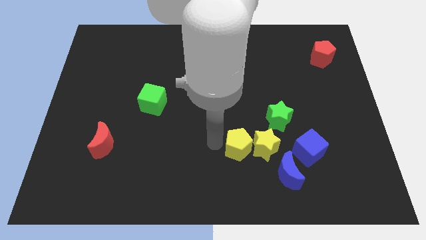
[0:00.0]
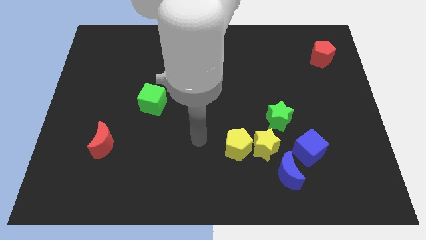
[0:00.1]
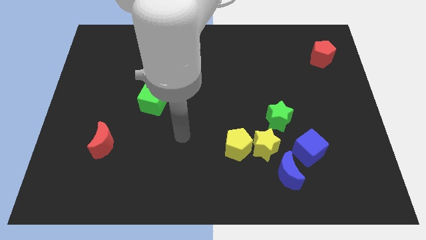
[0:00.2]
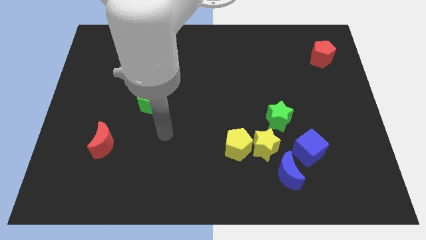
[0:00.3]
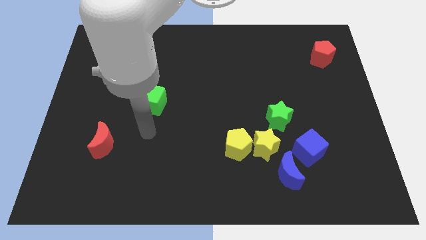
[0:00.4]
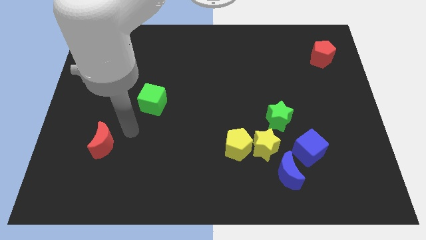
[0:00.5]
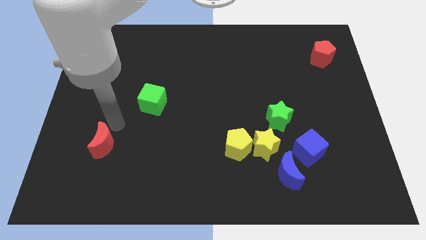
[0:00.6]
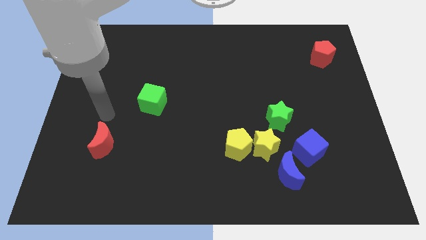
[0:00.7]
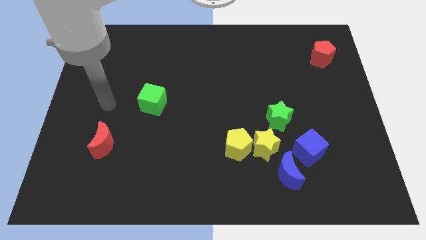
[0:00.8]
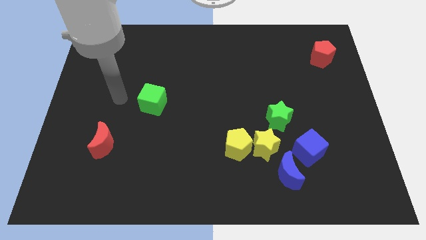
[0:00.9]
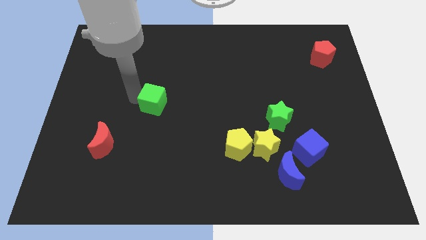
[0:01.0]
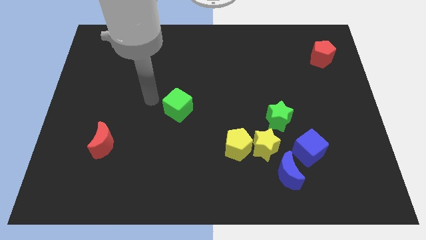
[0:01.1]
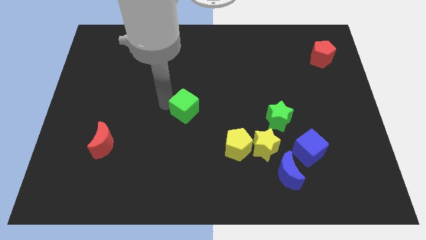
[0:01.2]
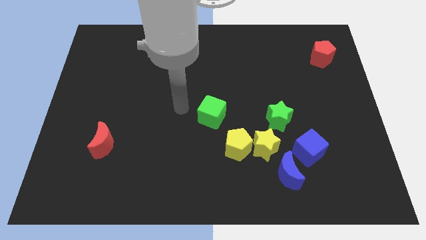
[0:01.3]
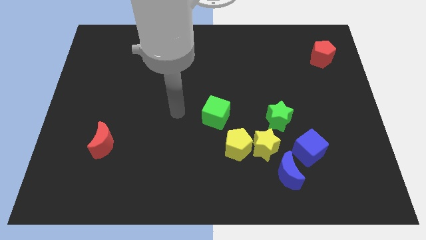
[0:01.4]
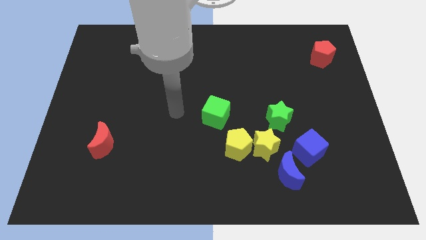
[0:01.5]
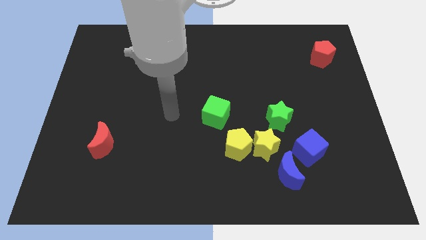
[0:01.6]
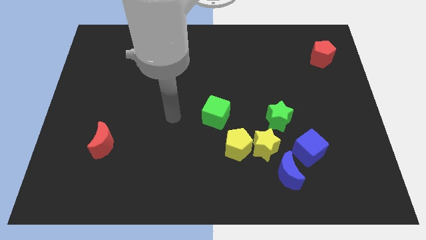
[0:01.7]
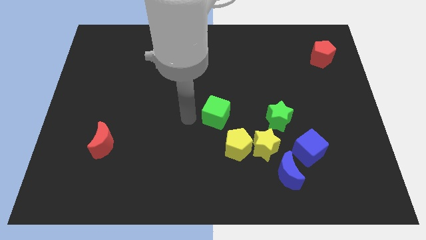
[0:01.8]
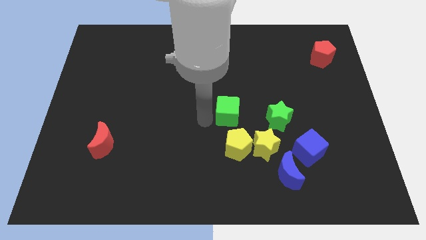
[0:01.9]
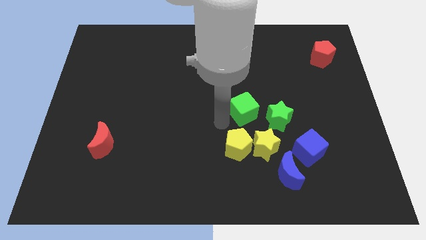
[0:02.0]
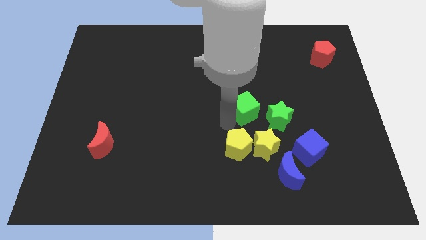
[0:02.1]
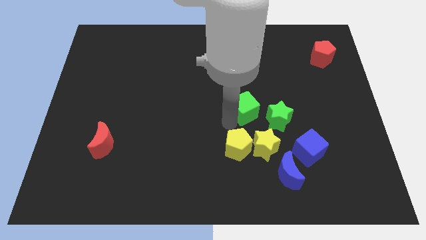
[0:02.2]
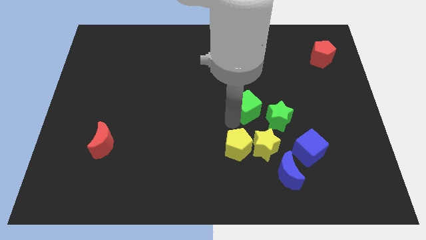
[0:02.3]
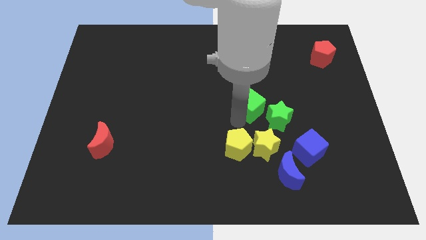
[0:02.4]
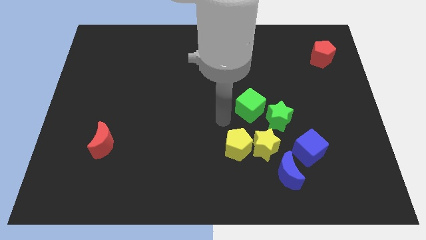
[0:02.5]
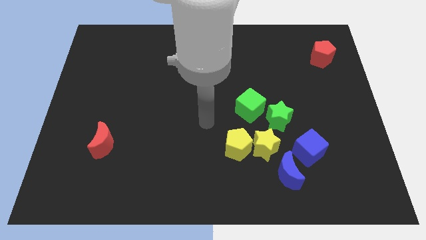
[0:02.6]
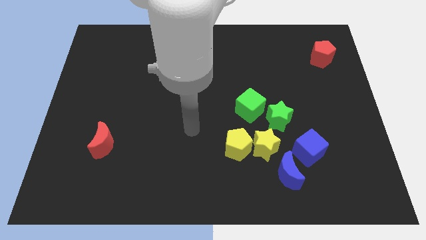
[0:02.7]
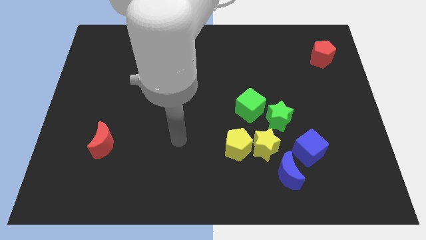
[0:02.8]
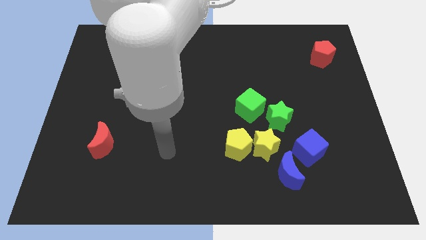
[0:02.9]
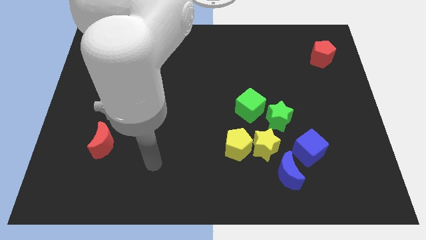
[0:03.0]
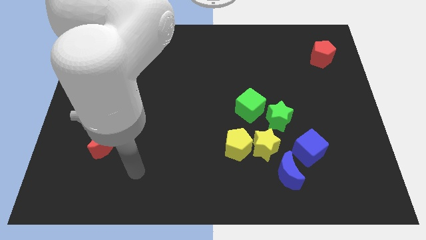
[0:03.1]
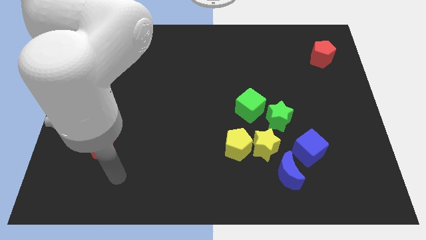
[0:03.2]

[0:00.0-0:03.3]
place the green cube at the top right of yellow pentagon

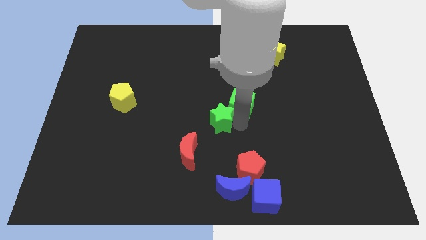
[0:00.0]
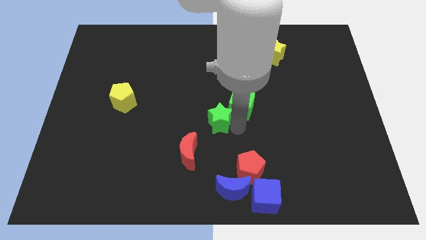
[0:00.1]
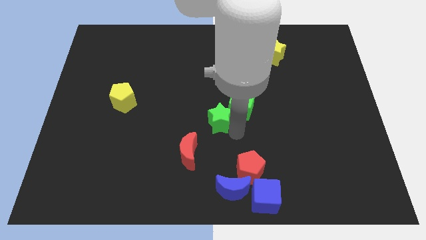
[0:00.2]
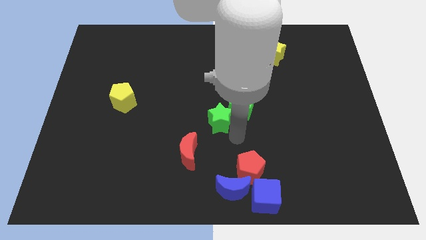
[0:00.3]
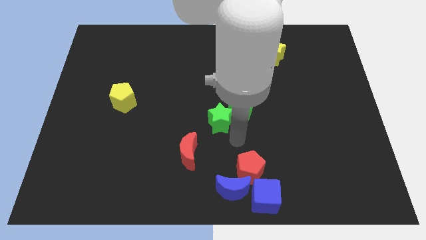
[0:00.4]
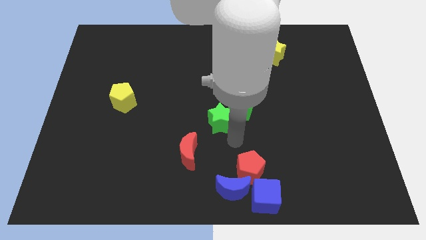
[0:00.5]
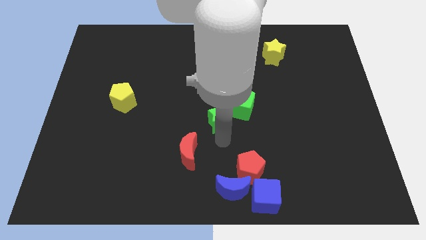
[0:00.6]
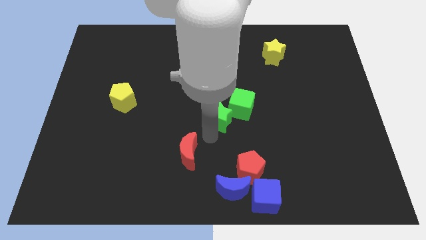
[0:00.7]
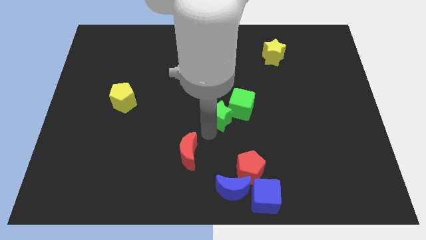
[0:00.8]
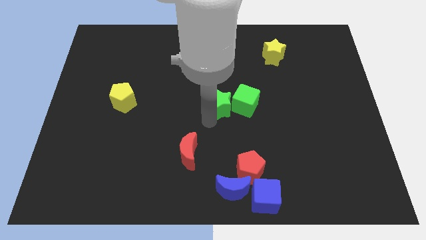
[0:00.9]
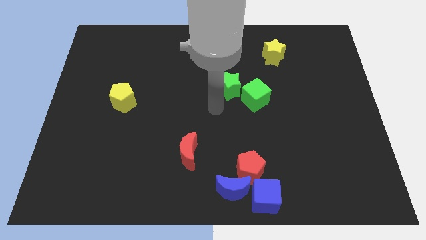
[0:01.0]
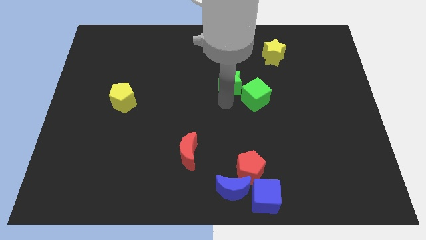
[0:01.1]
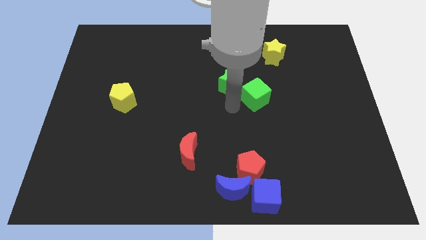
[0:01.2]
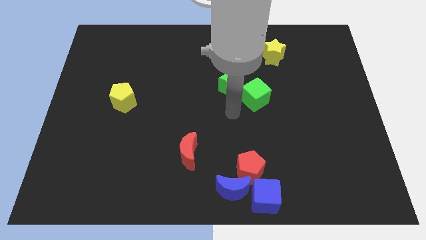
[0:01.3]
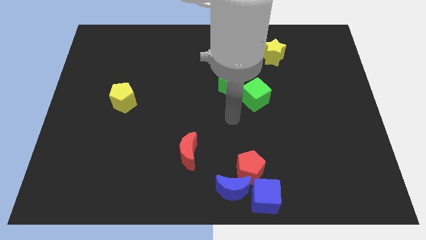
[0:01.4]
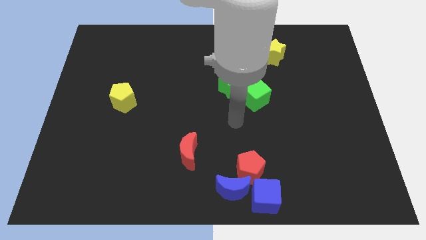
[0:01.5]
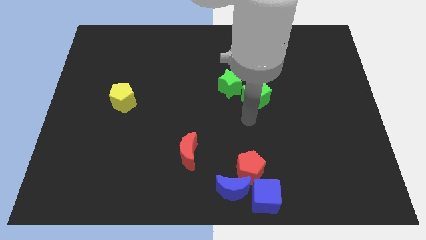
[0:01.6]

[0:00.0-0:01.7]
move both the green blocks towards the yellow star

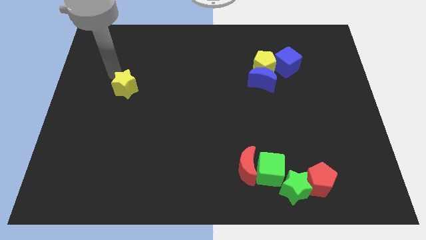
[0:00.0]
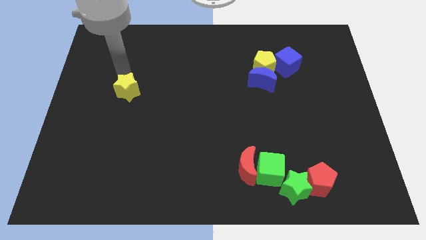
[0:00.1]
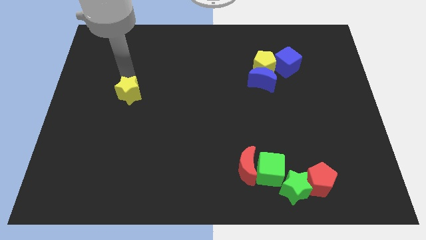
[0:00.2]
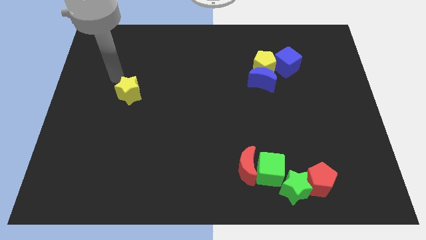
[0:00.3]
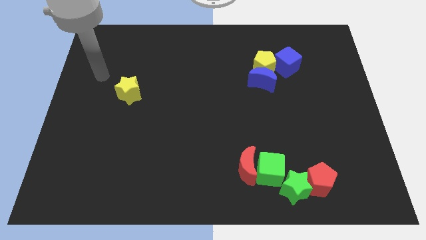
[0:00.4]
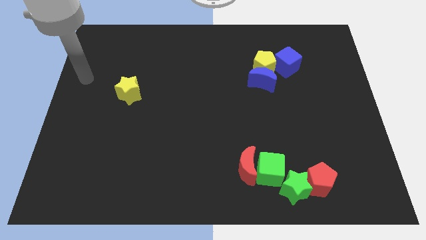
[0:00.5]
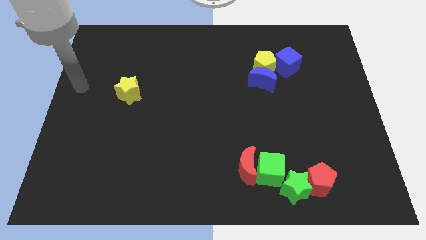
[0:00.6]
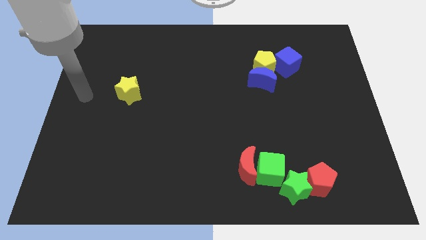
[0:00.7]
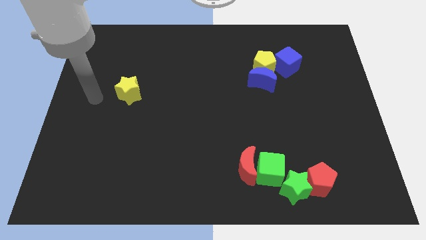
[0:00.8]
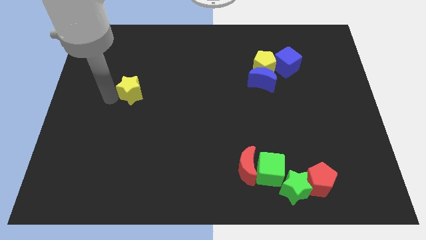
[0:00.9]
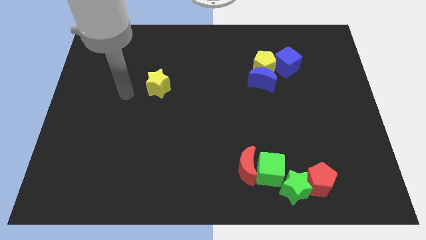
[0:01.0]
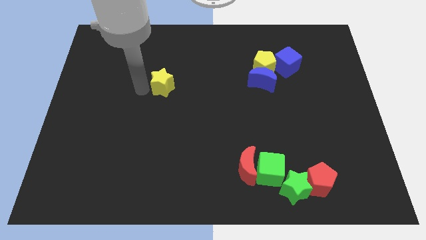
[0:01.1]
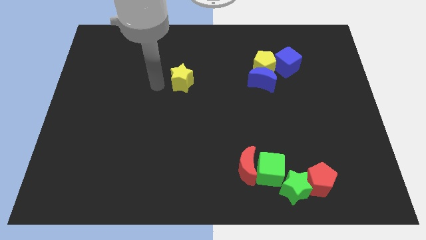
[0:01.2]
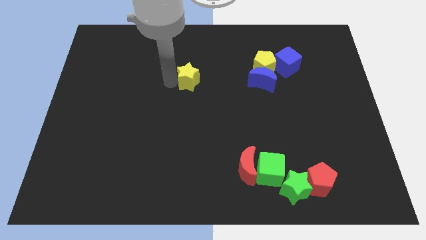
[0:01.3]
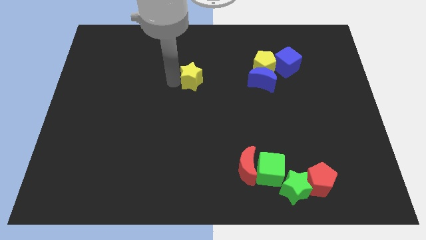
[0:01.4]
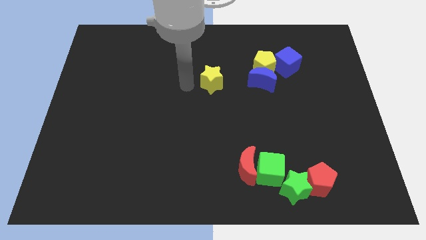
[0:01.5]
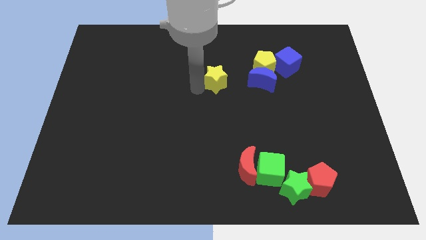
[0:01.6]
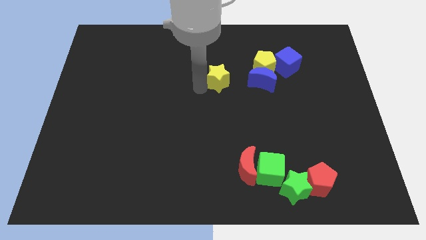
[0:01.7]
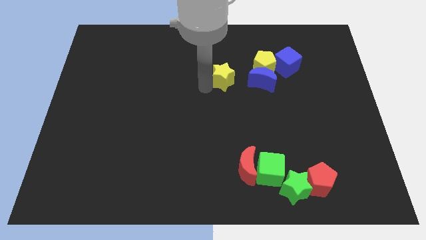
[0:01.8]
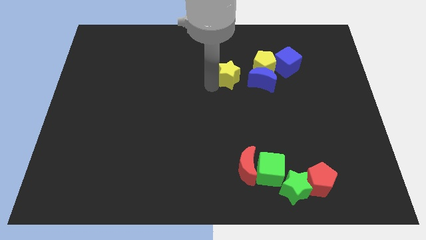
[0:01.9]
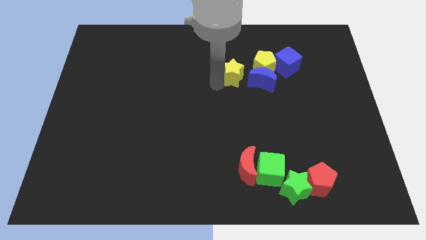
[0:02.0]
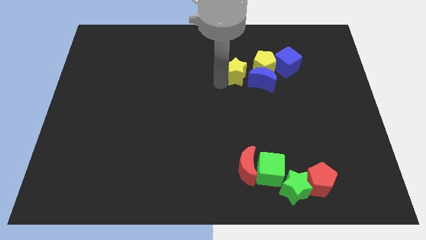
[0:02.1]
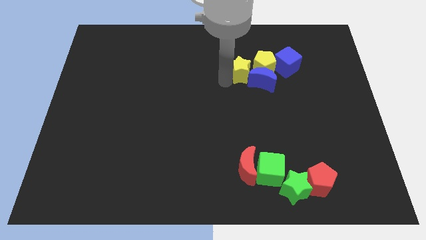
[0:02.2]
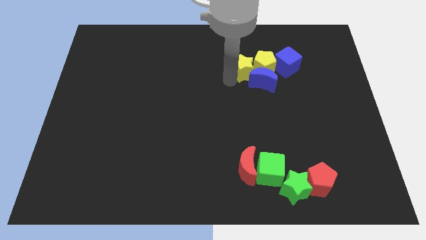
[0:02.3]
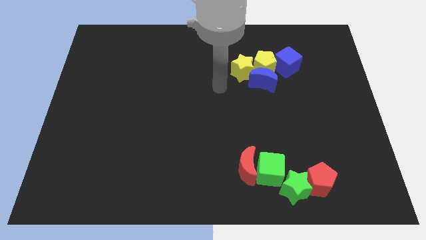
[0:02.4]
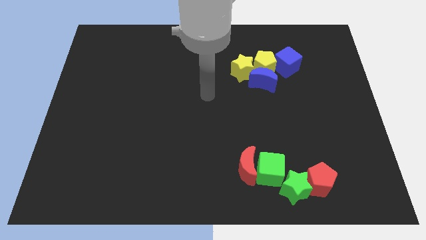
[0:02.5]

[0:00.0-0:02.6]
move the yellow star to left of the yellow pentagon

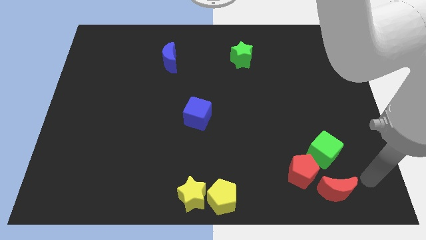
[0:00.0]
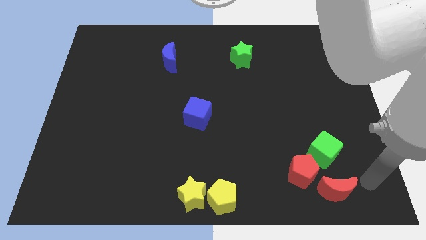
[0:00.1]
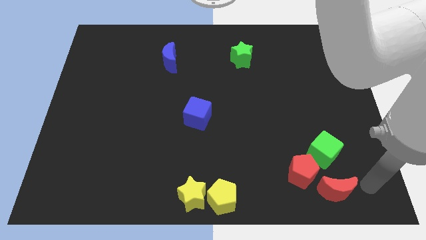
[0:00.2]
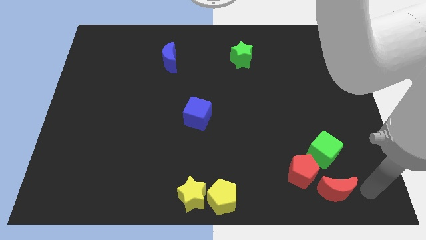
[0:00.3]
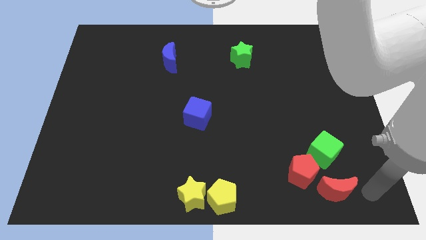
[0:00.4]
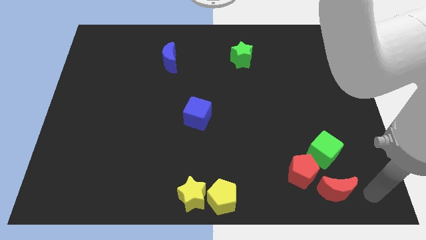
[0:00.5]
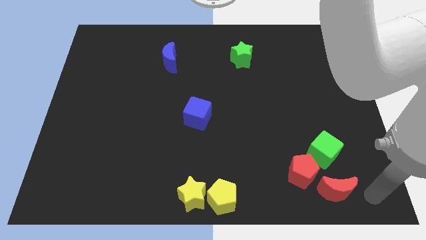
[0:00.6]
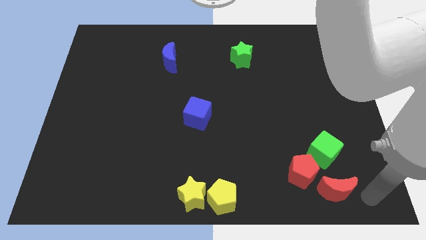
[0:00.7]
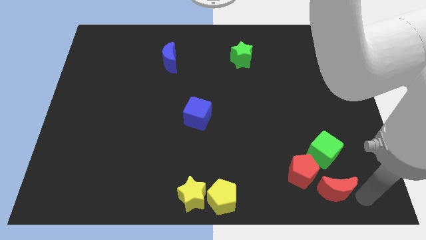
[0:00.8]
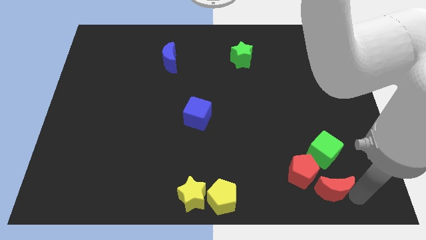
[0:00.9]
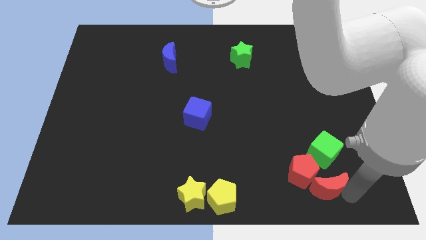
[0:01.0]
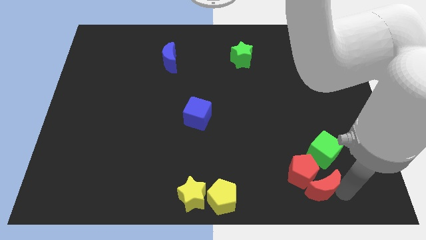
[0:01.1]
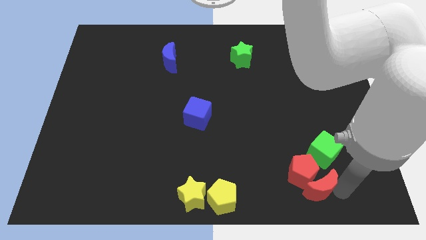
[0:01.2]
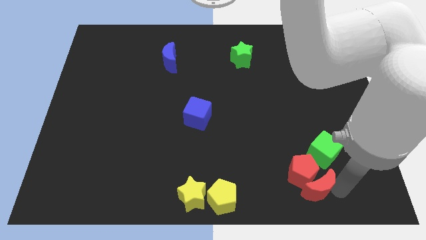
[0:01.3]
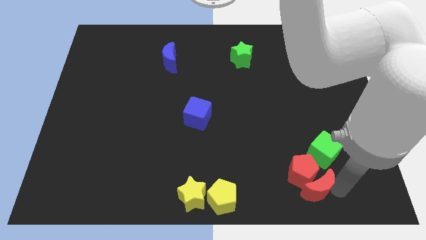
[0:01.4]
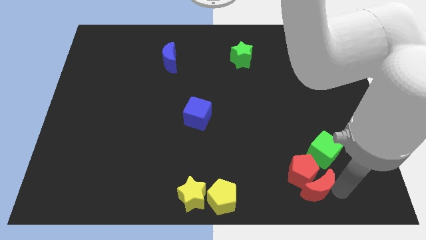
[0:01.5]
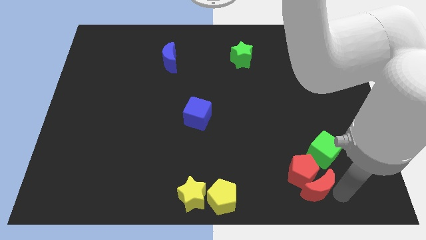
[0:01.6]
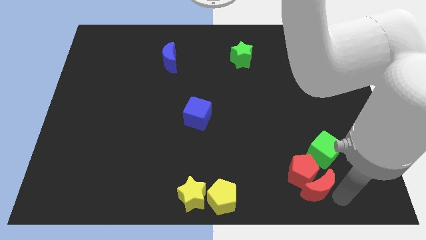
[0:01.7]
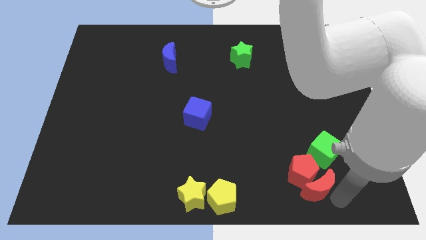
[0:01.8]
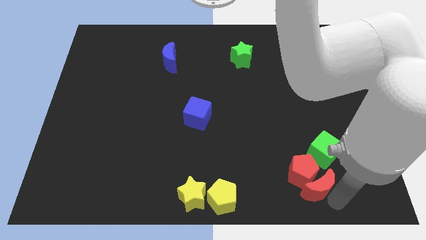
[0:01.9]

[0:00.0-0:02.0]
place the red crescent towards the bottom side of the red pentagon
